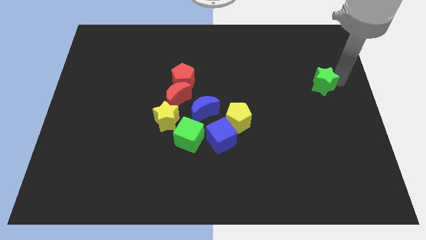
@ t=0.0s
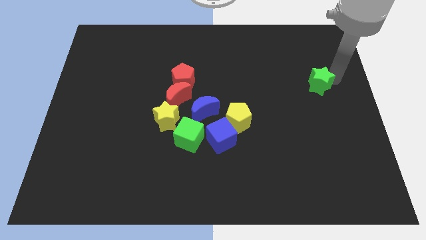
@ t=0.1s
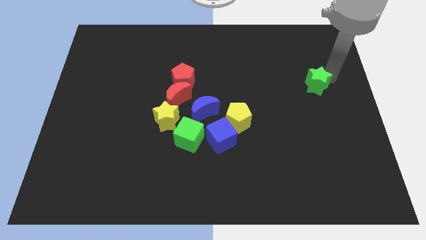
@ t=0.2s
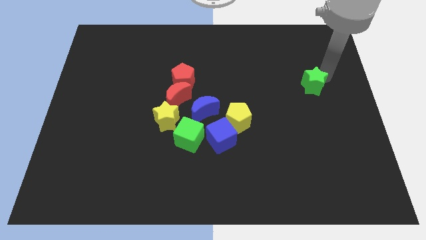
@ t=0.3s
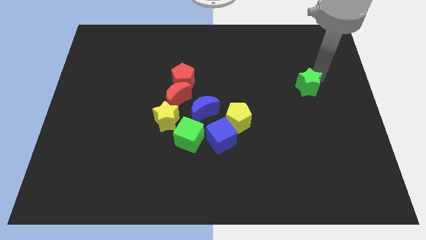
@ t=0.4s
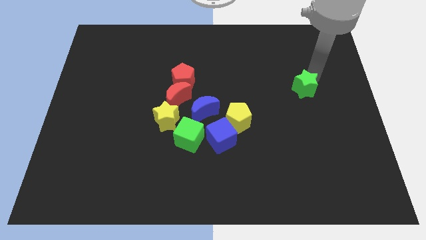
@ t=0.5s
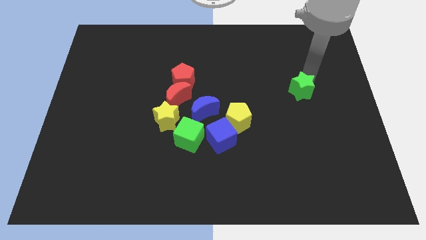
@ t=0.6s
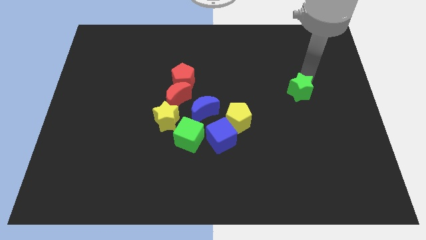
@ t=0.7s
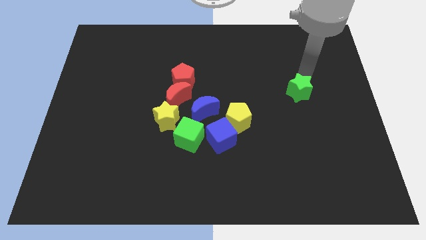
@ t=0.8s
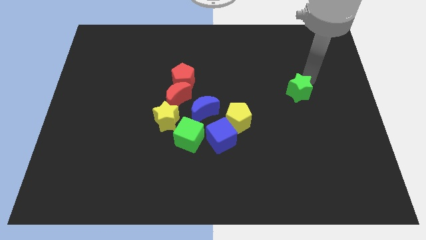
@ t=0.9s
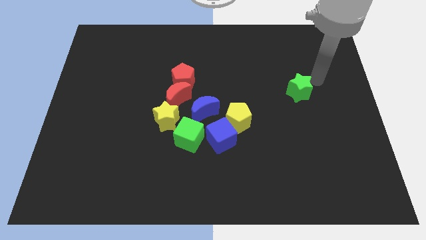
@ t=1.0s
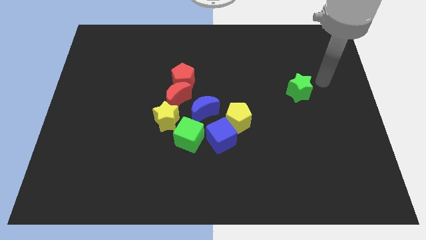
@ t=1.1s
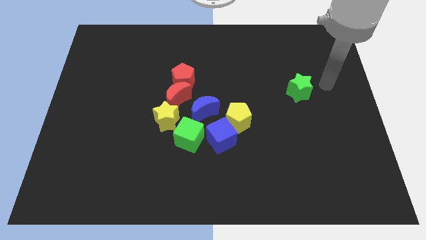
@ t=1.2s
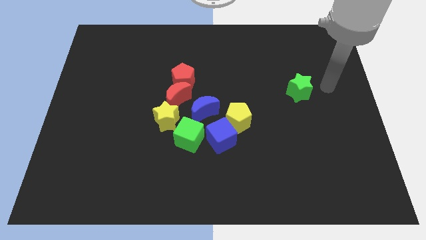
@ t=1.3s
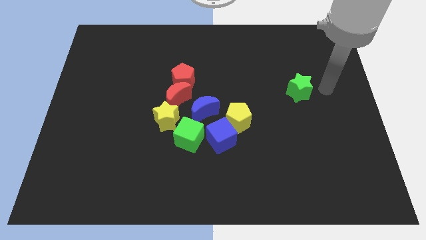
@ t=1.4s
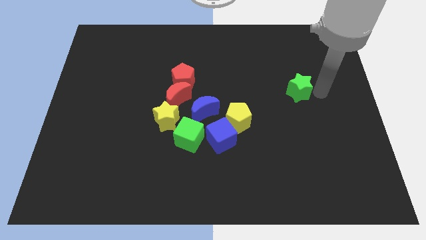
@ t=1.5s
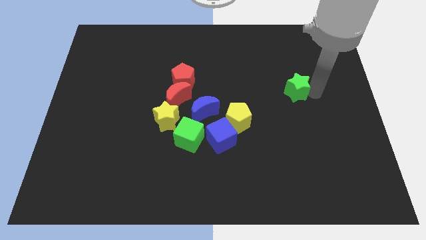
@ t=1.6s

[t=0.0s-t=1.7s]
place green star to the top right of the yellow pentagon

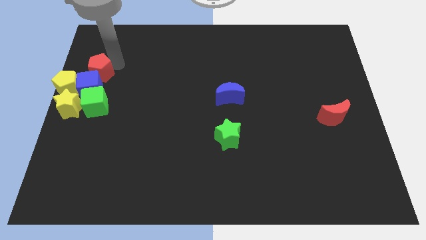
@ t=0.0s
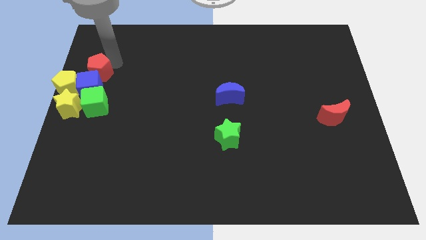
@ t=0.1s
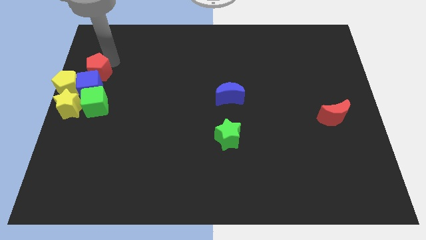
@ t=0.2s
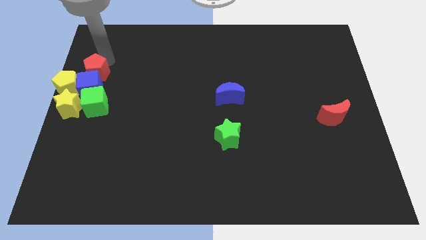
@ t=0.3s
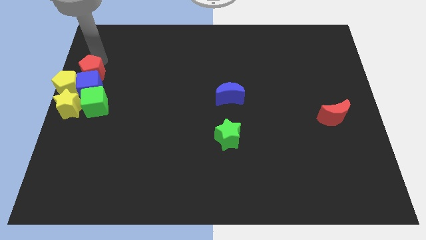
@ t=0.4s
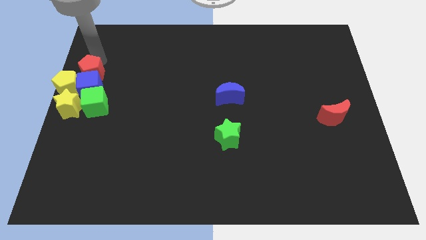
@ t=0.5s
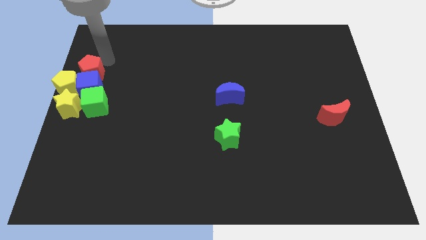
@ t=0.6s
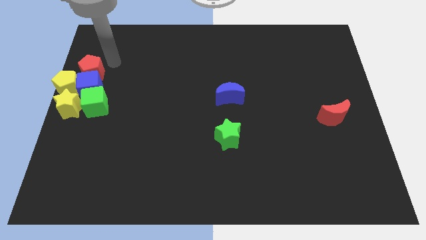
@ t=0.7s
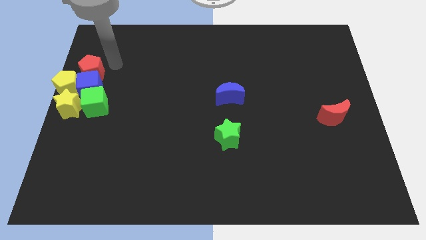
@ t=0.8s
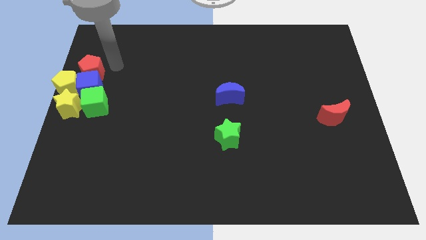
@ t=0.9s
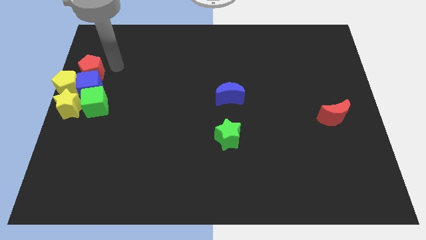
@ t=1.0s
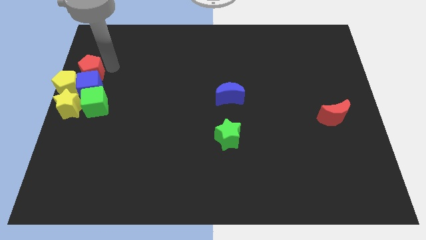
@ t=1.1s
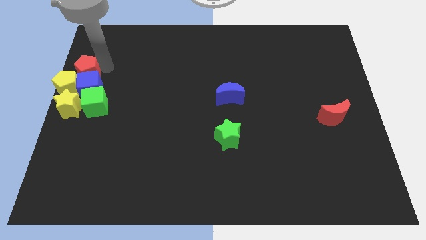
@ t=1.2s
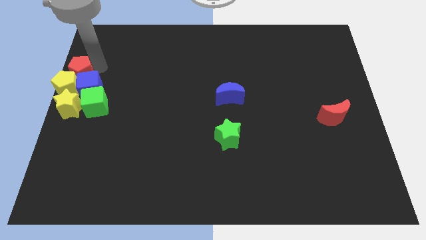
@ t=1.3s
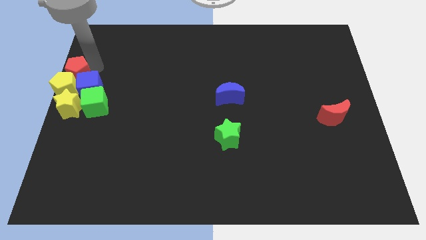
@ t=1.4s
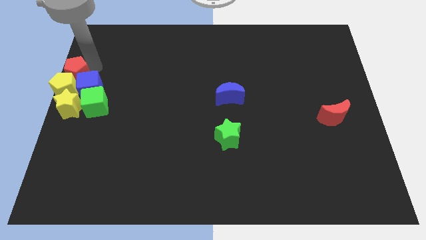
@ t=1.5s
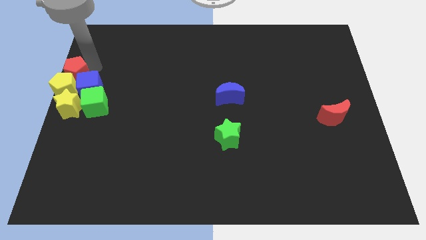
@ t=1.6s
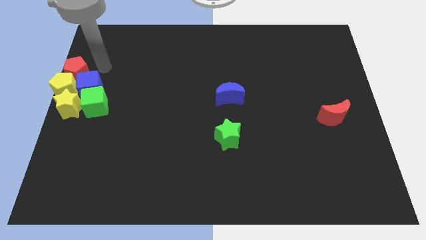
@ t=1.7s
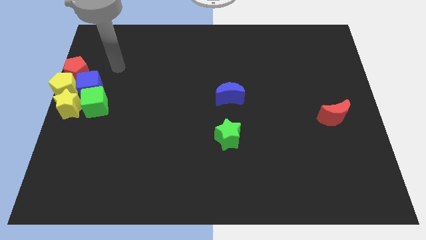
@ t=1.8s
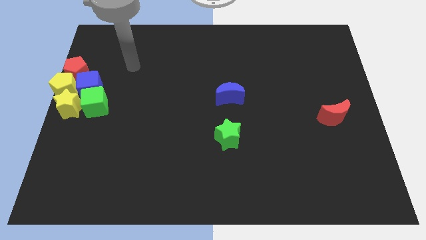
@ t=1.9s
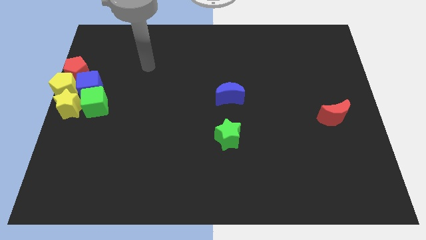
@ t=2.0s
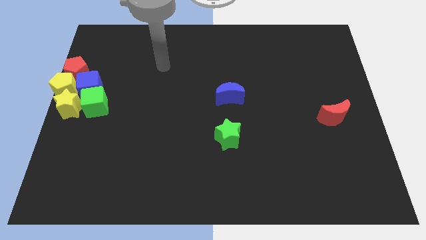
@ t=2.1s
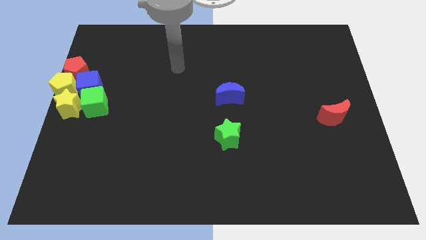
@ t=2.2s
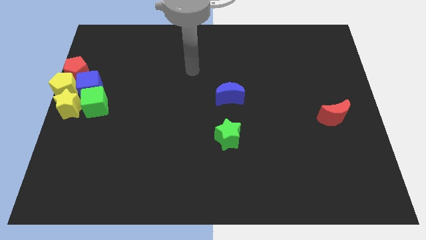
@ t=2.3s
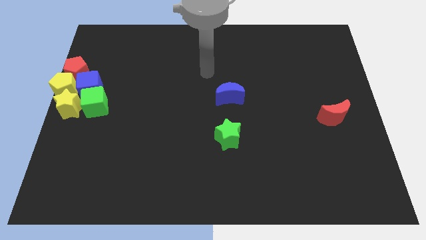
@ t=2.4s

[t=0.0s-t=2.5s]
slightly move the red pentagon near the yellow pentagon

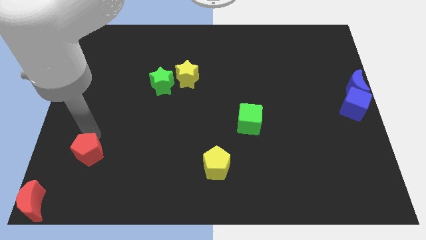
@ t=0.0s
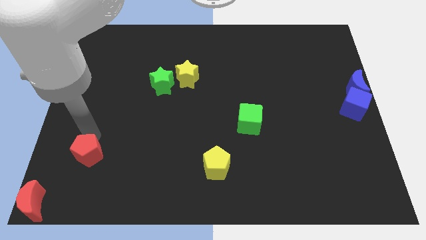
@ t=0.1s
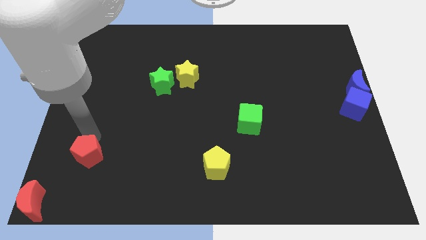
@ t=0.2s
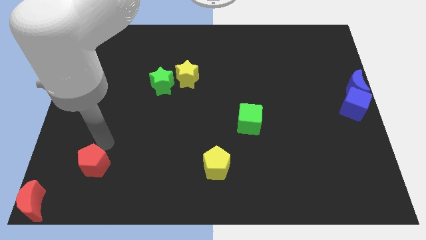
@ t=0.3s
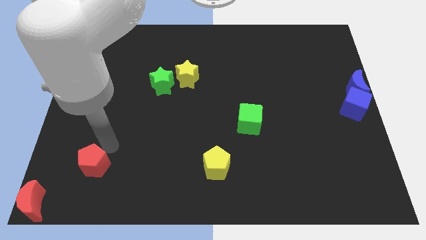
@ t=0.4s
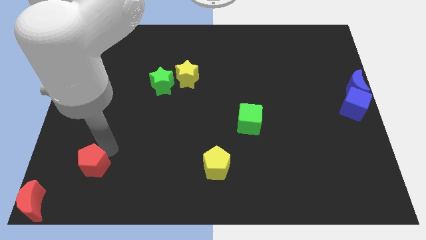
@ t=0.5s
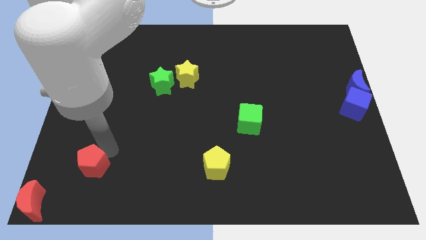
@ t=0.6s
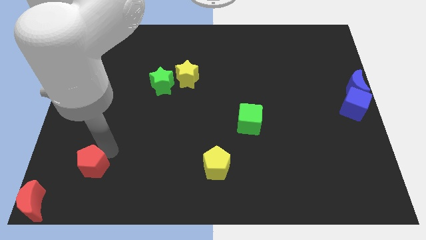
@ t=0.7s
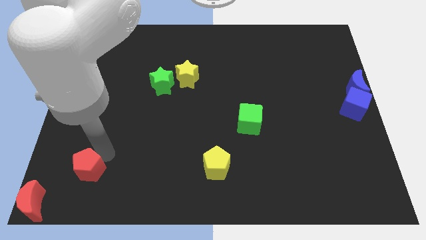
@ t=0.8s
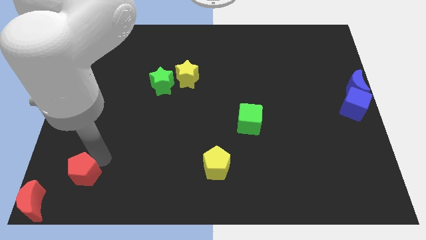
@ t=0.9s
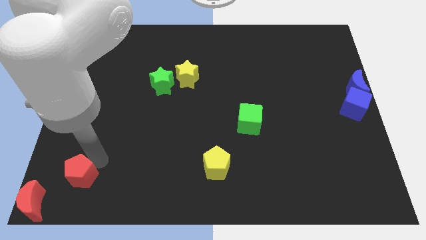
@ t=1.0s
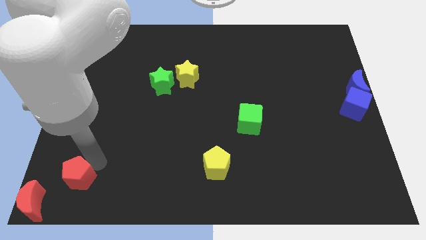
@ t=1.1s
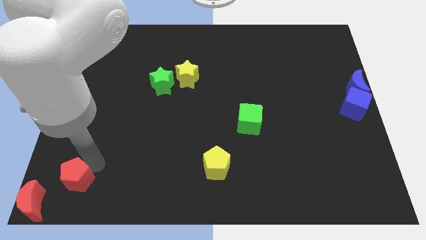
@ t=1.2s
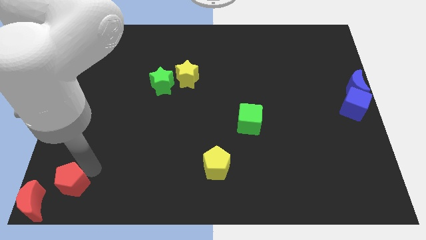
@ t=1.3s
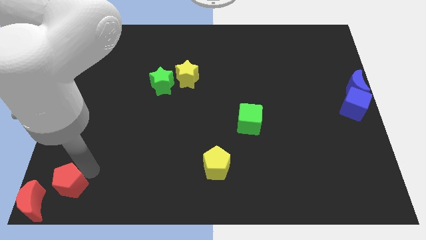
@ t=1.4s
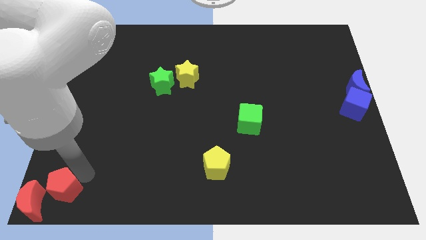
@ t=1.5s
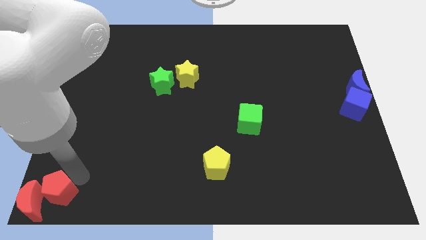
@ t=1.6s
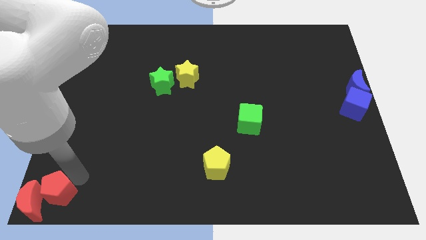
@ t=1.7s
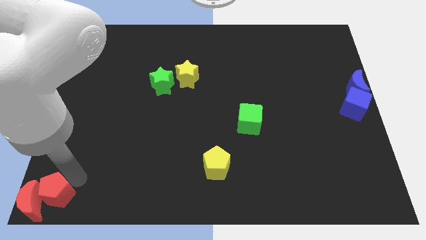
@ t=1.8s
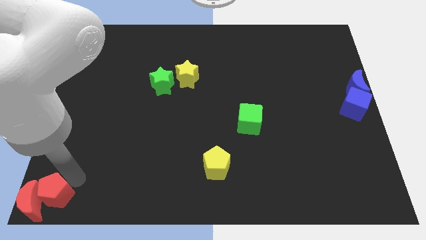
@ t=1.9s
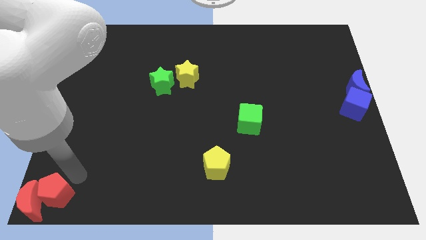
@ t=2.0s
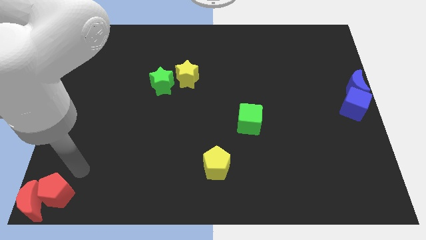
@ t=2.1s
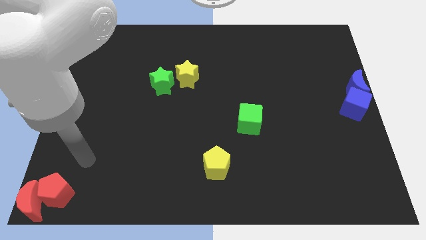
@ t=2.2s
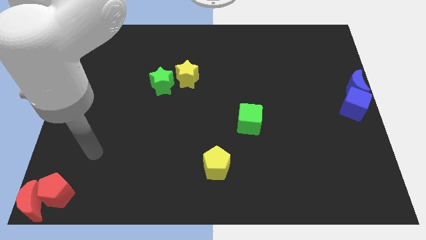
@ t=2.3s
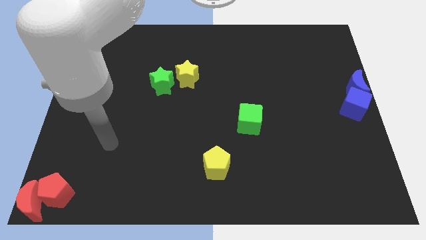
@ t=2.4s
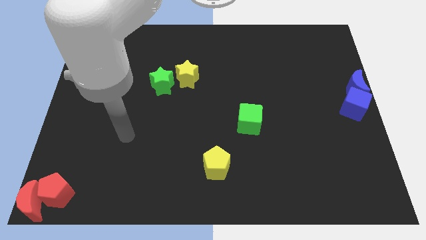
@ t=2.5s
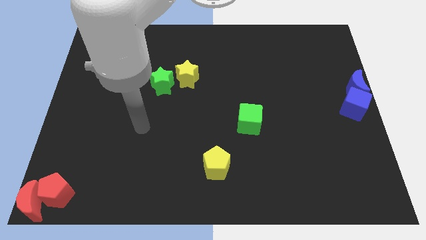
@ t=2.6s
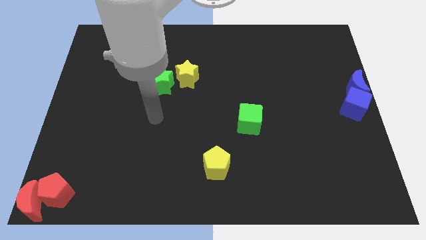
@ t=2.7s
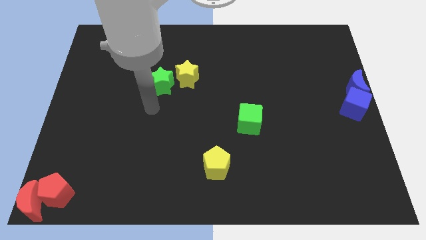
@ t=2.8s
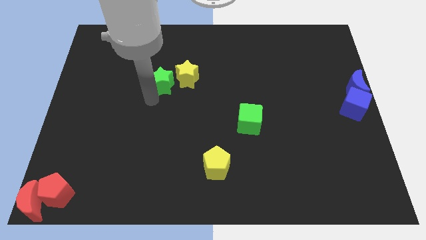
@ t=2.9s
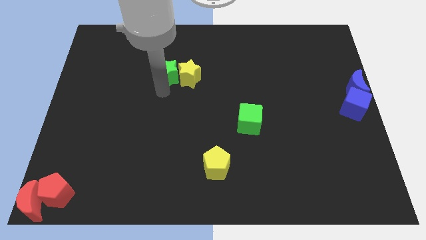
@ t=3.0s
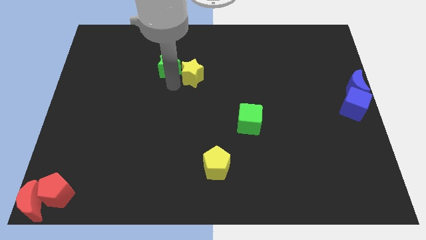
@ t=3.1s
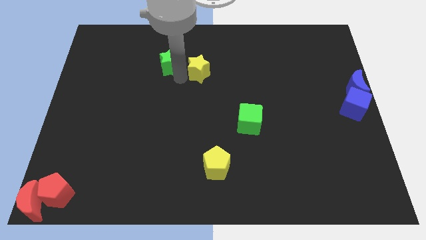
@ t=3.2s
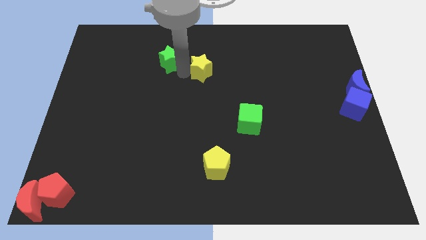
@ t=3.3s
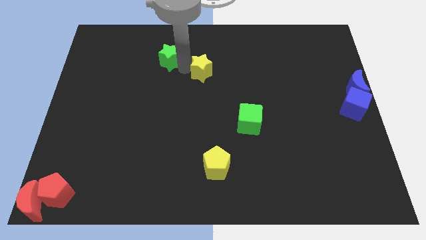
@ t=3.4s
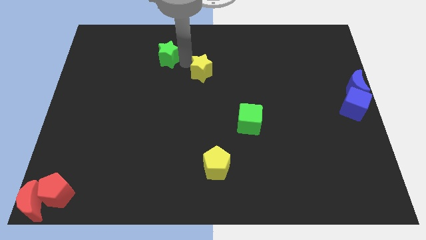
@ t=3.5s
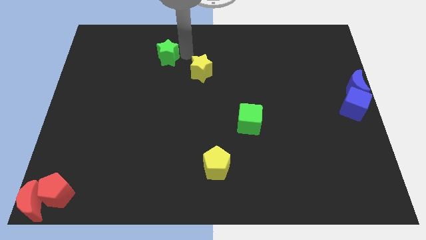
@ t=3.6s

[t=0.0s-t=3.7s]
place your arm between green star and yellow star

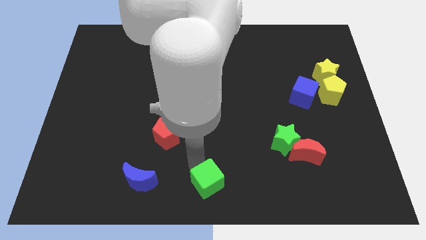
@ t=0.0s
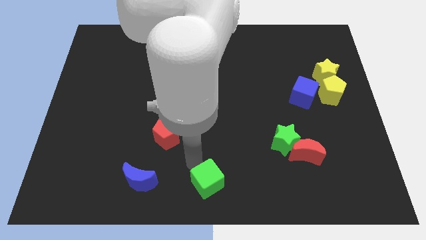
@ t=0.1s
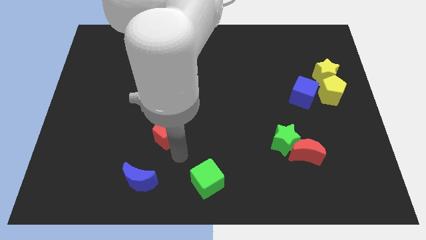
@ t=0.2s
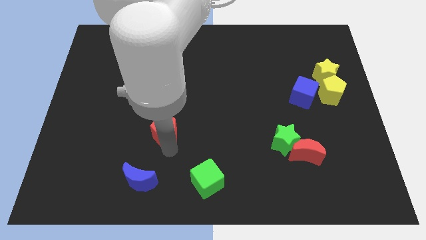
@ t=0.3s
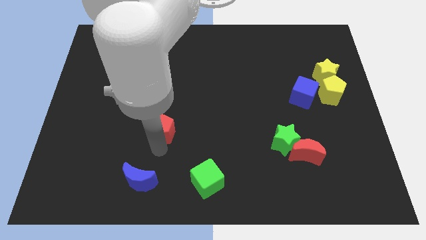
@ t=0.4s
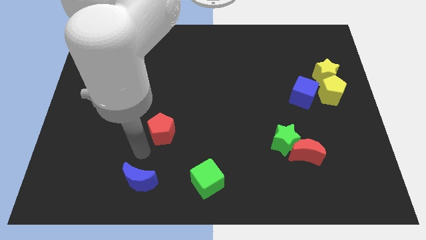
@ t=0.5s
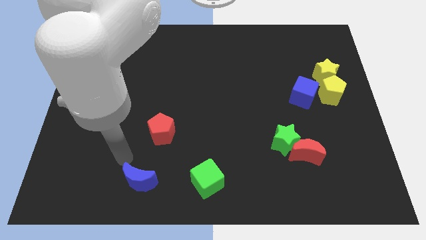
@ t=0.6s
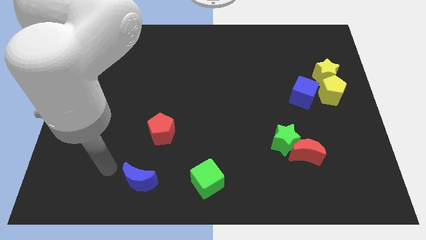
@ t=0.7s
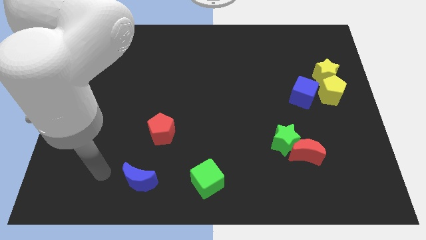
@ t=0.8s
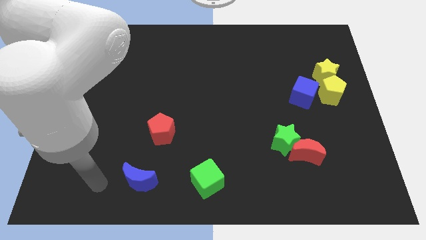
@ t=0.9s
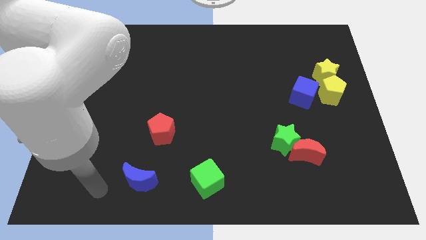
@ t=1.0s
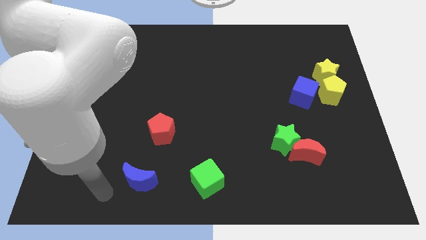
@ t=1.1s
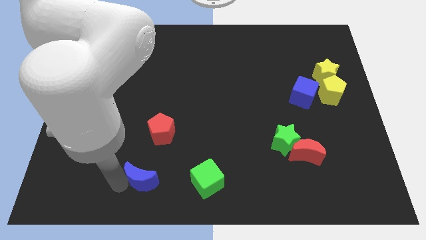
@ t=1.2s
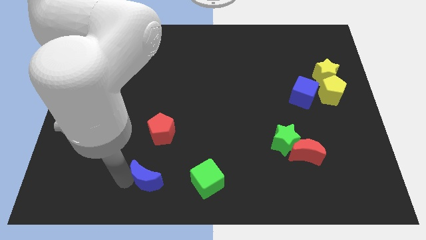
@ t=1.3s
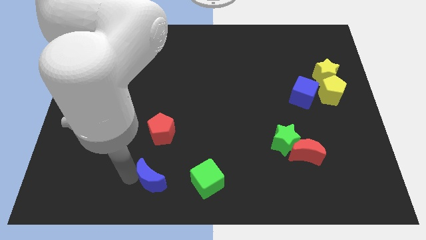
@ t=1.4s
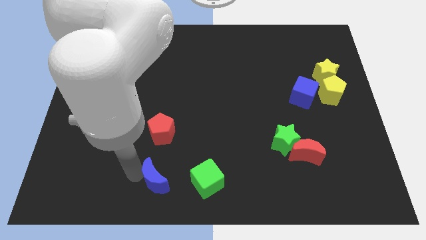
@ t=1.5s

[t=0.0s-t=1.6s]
move your arm away from the green cube
